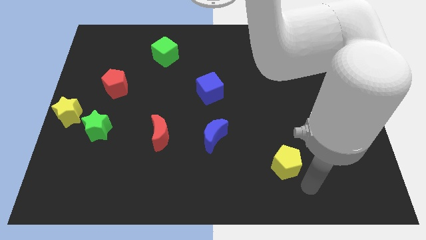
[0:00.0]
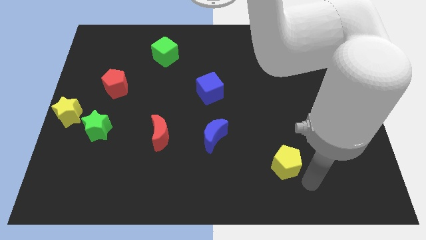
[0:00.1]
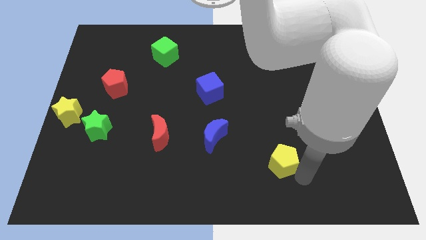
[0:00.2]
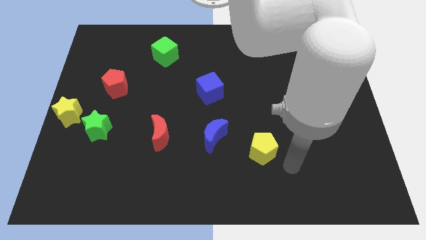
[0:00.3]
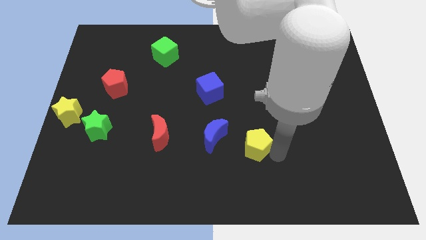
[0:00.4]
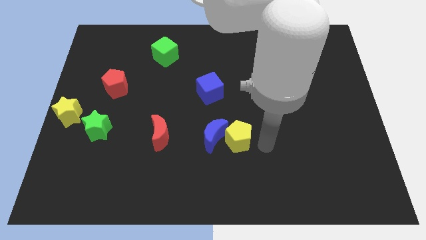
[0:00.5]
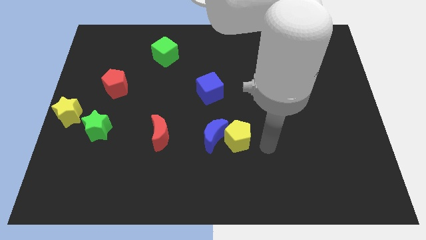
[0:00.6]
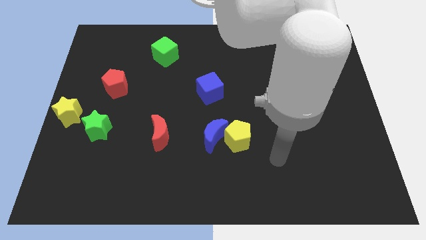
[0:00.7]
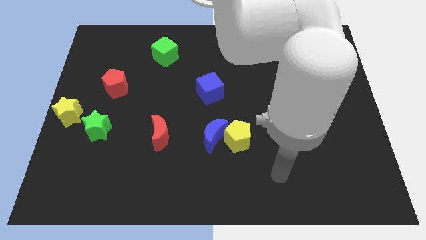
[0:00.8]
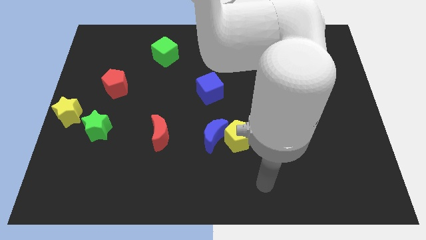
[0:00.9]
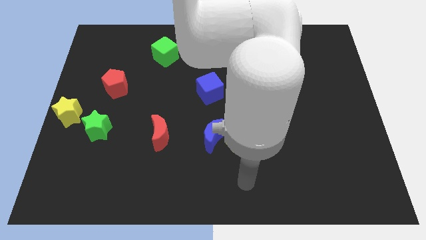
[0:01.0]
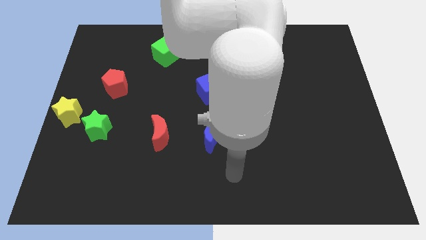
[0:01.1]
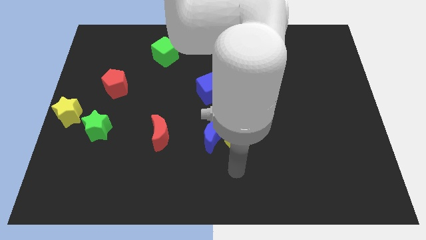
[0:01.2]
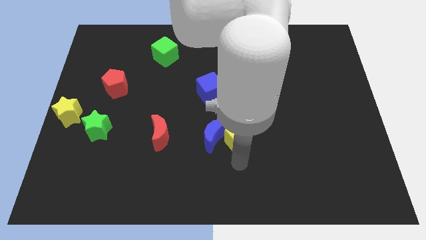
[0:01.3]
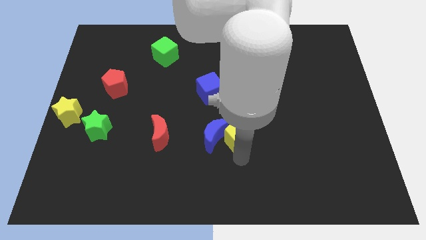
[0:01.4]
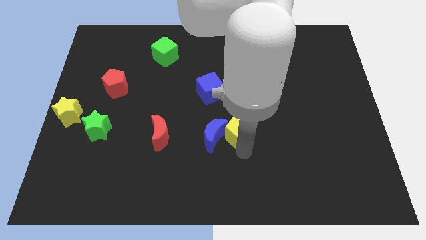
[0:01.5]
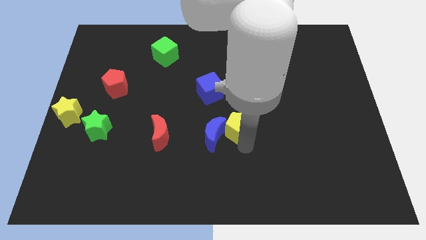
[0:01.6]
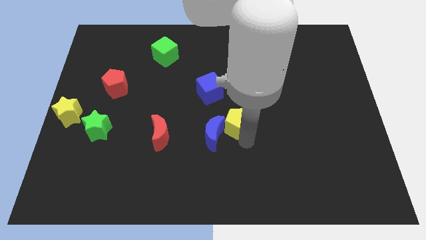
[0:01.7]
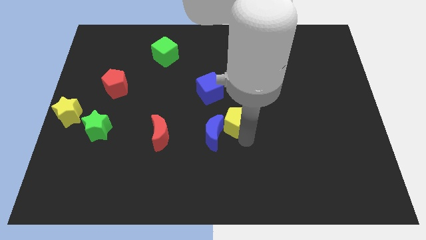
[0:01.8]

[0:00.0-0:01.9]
push the yellow pentagon into the blue moon

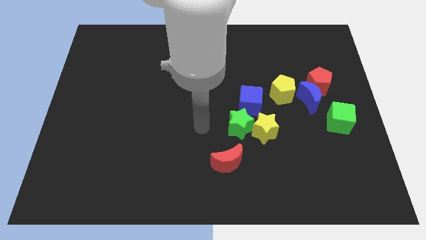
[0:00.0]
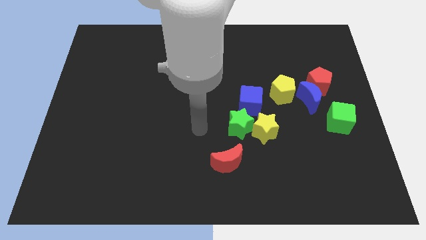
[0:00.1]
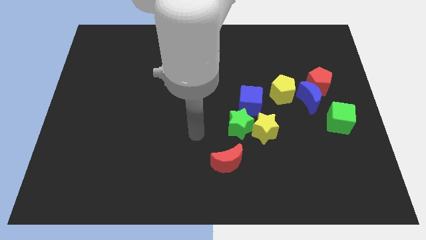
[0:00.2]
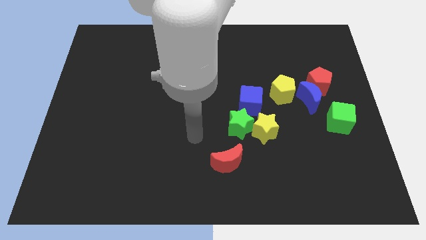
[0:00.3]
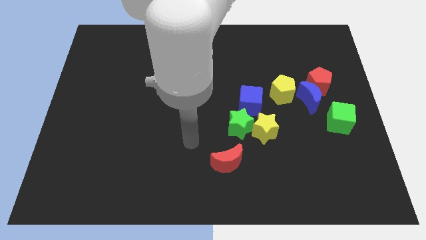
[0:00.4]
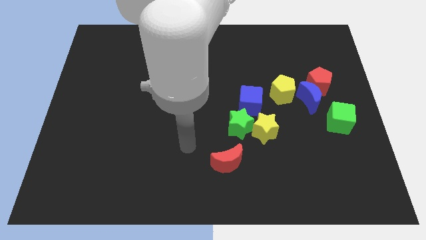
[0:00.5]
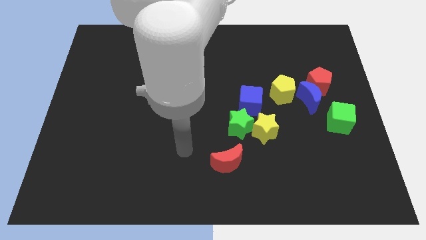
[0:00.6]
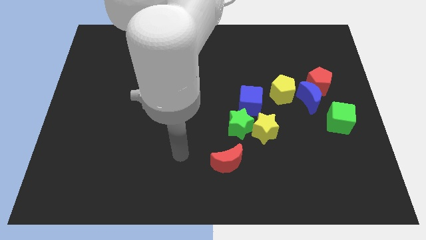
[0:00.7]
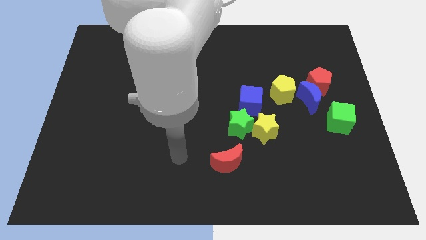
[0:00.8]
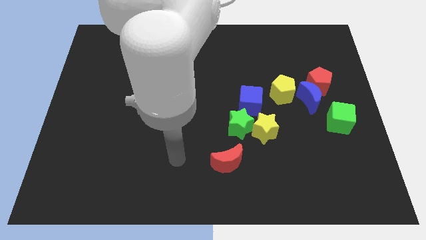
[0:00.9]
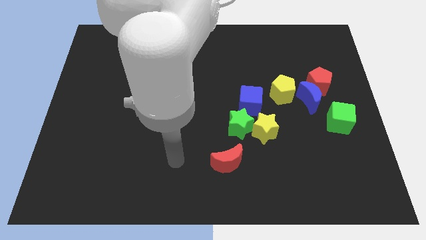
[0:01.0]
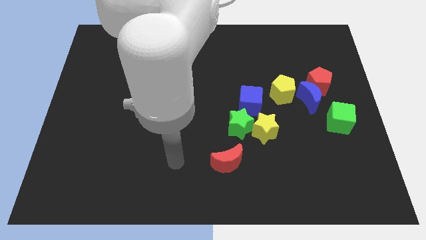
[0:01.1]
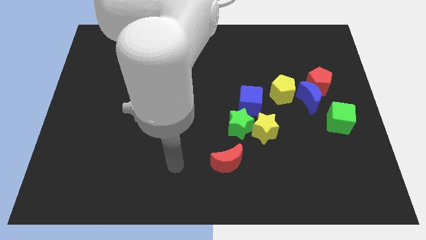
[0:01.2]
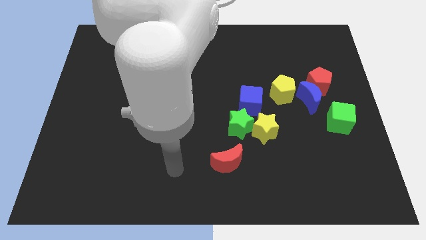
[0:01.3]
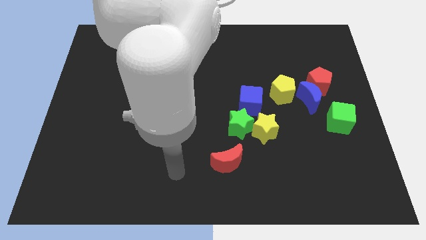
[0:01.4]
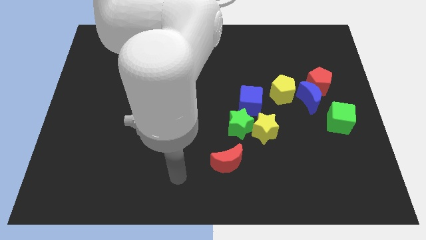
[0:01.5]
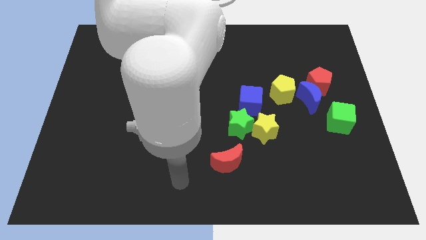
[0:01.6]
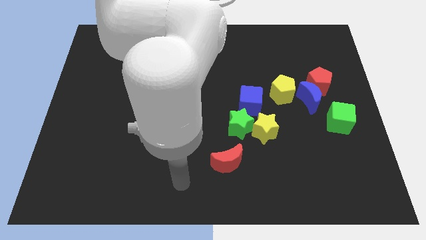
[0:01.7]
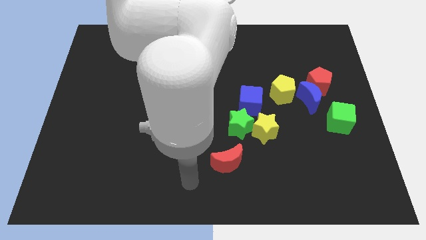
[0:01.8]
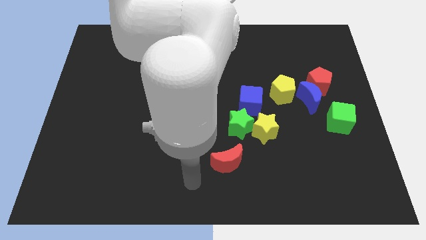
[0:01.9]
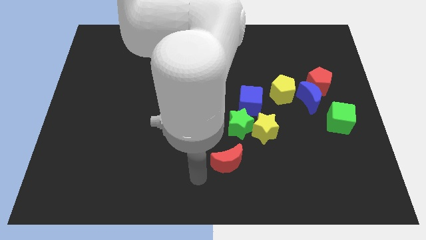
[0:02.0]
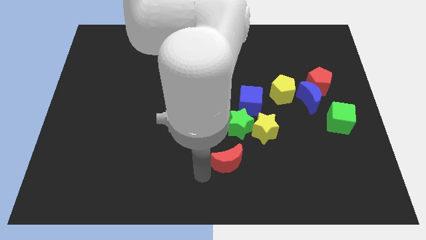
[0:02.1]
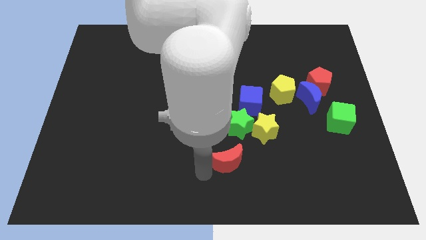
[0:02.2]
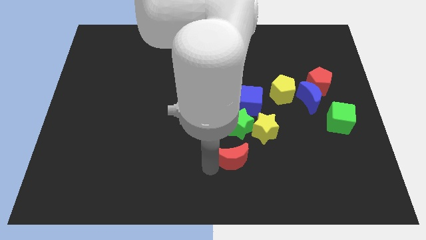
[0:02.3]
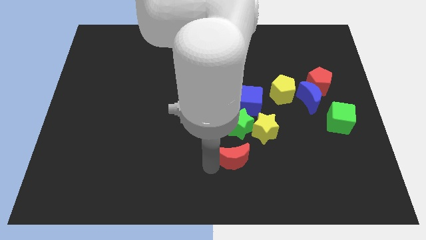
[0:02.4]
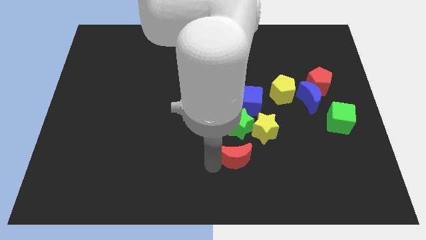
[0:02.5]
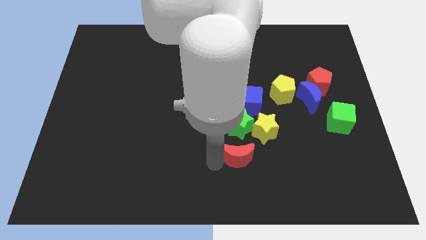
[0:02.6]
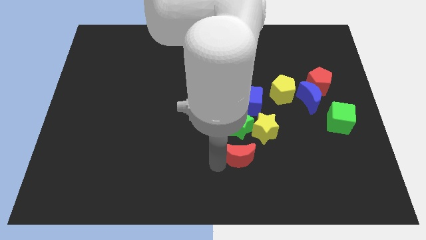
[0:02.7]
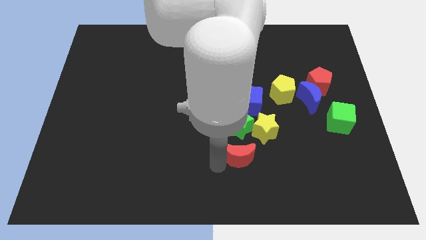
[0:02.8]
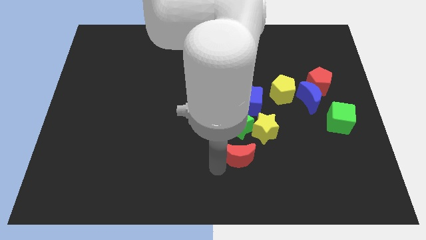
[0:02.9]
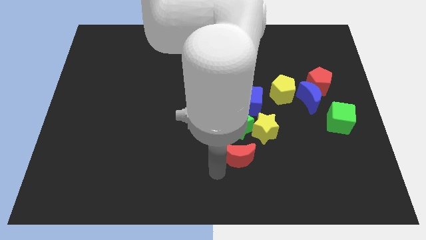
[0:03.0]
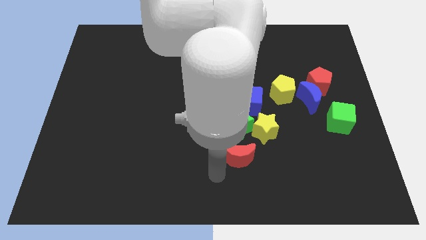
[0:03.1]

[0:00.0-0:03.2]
move the red crescent slightly towards the group of stars
